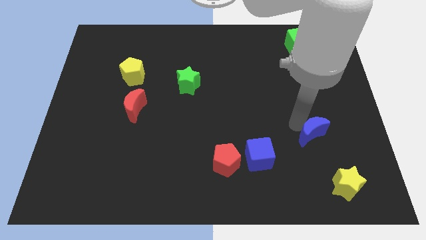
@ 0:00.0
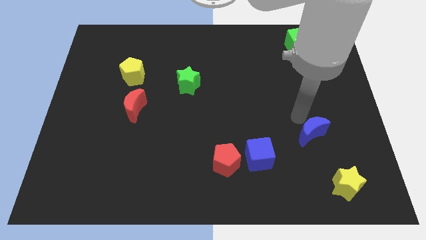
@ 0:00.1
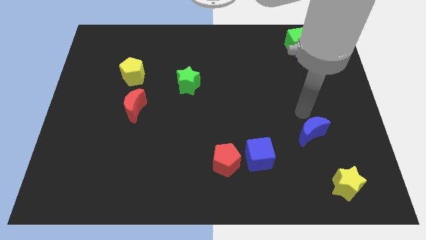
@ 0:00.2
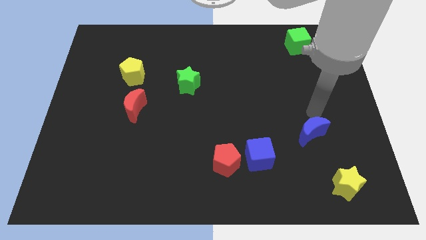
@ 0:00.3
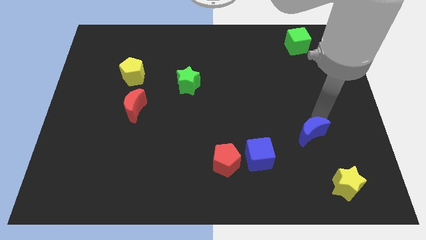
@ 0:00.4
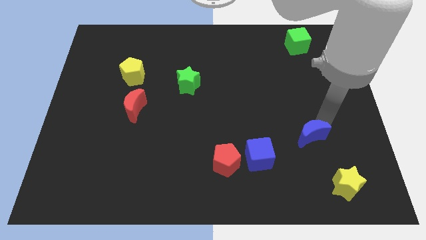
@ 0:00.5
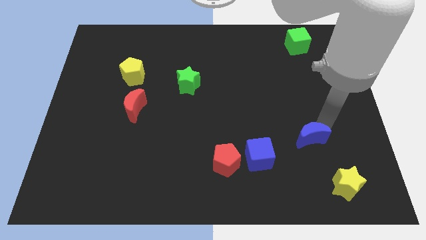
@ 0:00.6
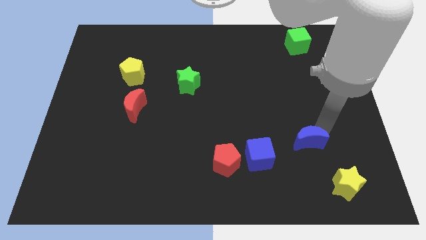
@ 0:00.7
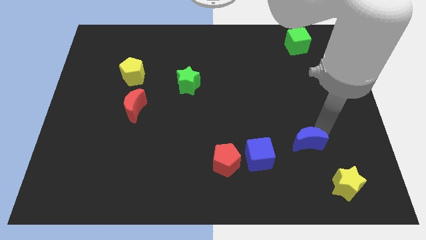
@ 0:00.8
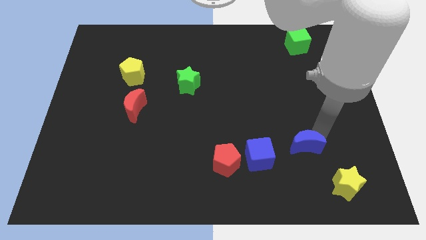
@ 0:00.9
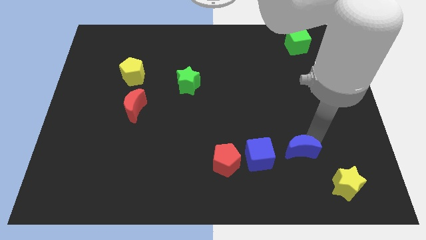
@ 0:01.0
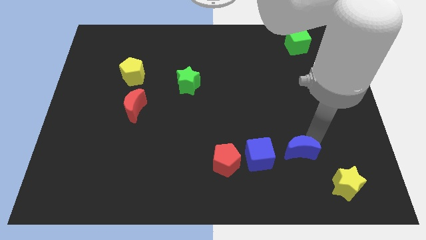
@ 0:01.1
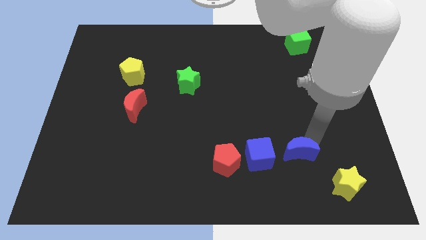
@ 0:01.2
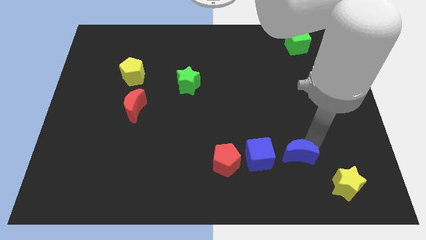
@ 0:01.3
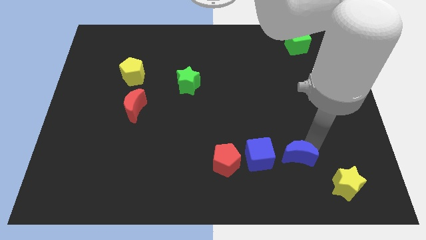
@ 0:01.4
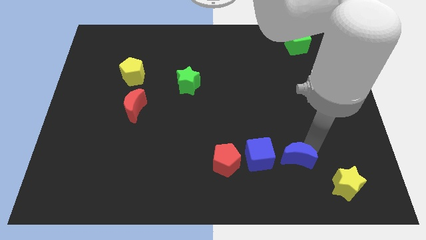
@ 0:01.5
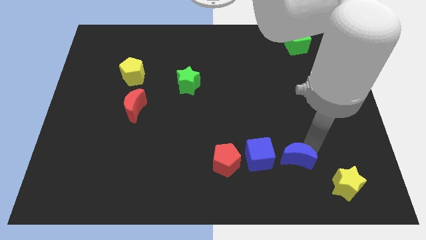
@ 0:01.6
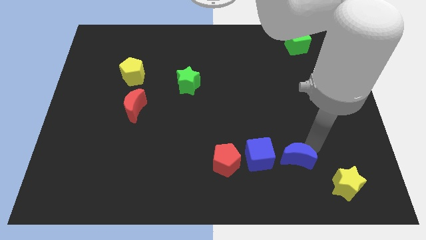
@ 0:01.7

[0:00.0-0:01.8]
bring the blue crescent close to the right side of the blue cube

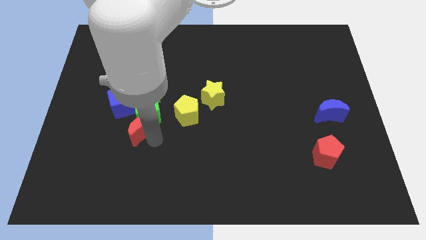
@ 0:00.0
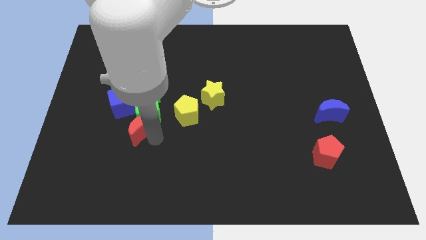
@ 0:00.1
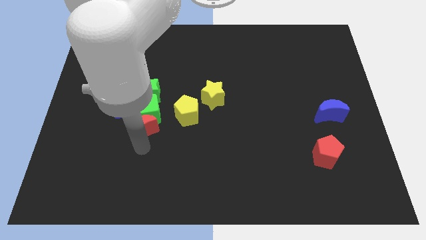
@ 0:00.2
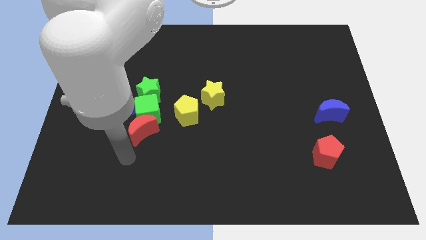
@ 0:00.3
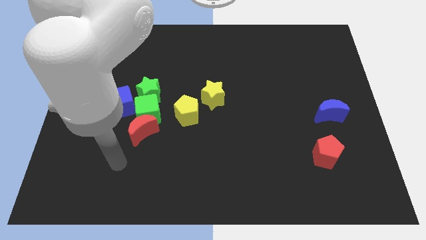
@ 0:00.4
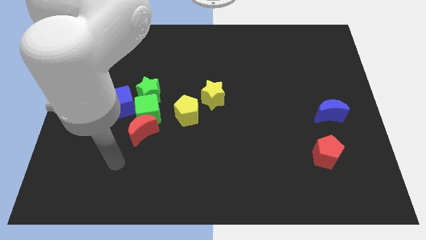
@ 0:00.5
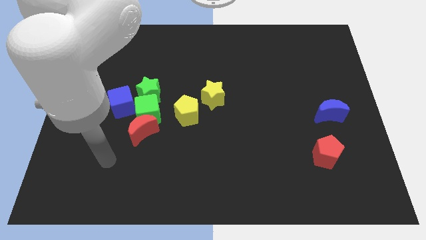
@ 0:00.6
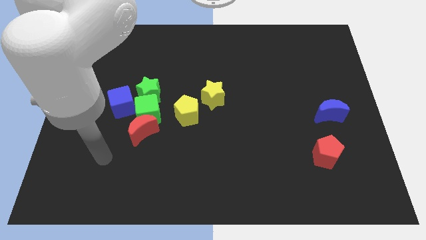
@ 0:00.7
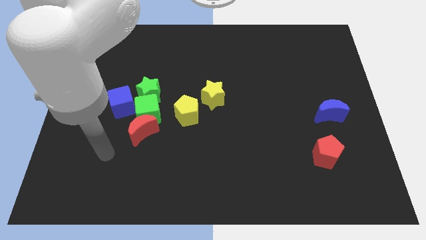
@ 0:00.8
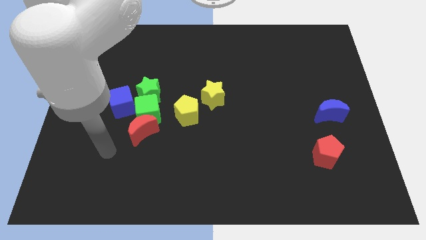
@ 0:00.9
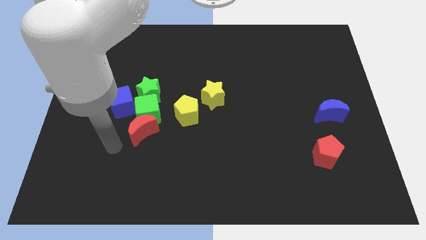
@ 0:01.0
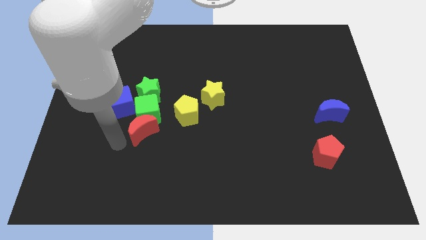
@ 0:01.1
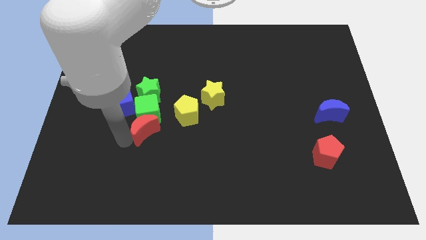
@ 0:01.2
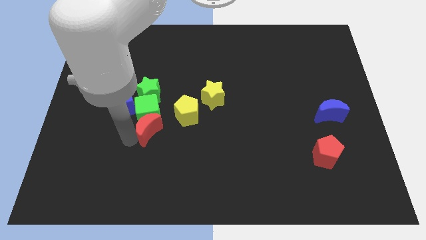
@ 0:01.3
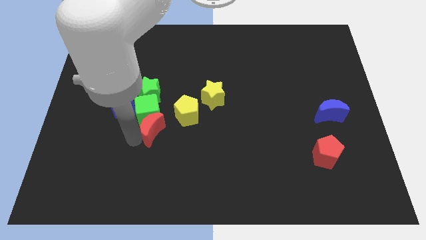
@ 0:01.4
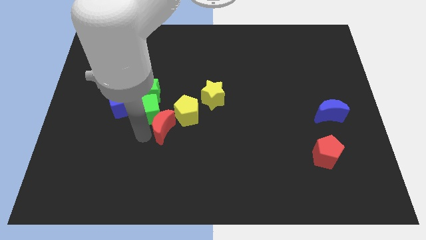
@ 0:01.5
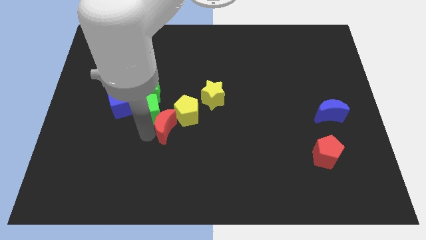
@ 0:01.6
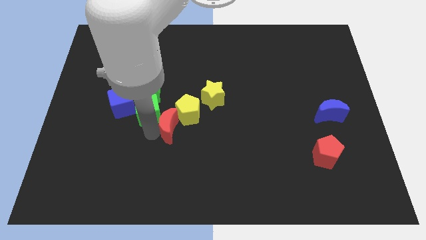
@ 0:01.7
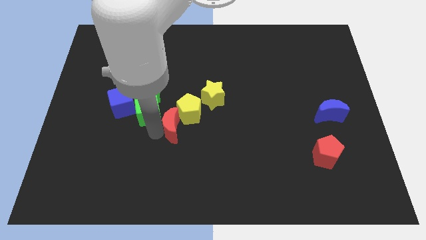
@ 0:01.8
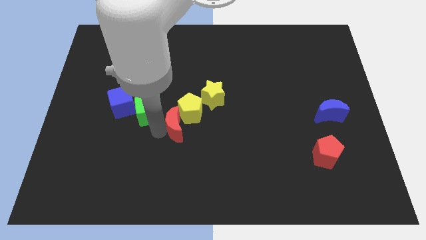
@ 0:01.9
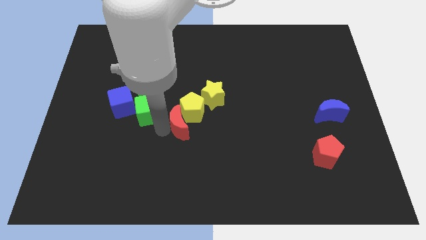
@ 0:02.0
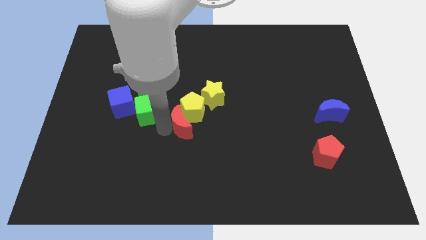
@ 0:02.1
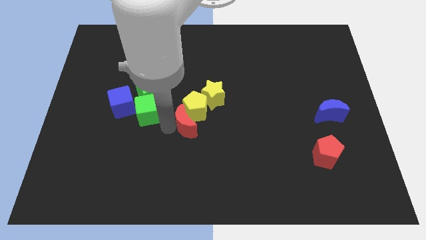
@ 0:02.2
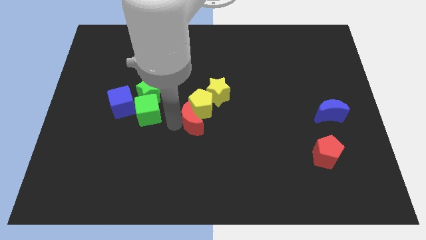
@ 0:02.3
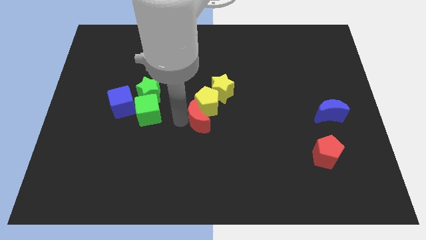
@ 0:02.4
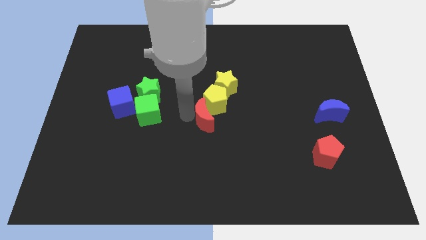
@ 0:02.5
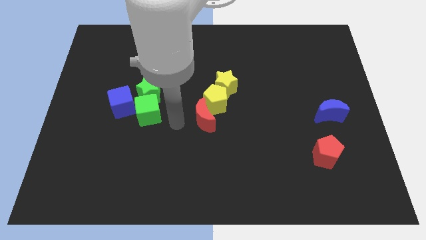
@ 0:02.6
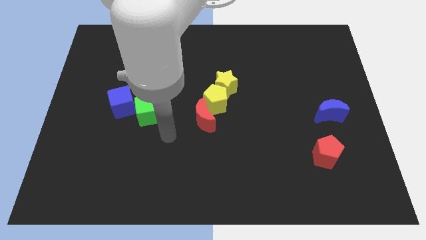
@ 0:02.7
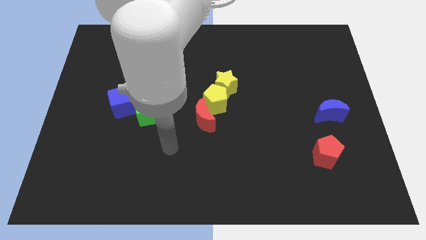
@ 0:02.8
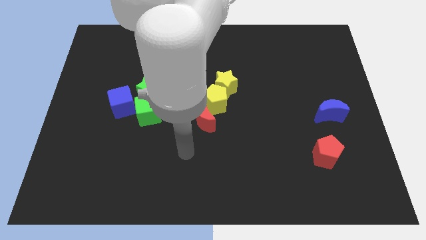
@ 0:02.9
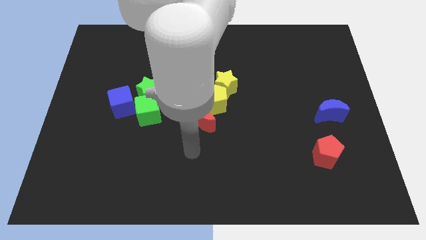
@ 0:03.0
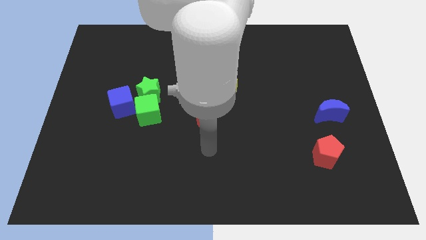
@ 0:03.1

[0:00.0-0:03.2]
push the red moon into the yellow pentagon

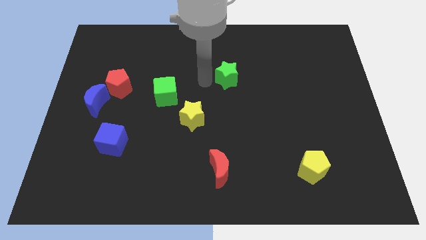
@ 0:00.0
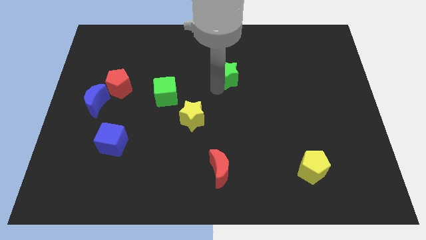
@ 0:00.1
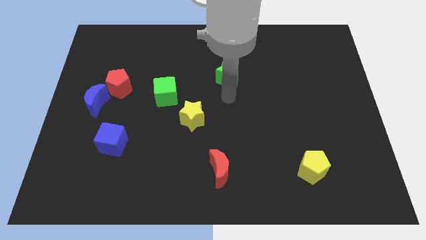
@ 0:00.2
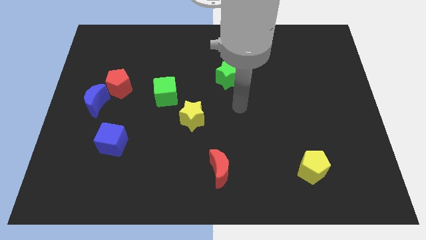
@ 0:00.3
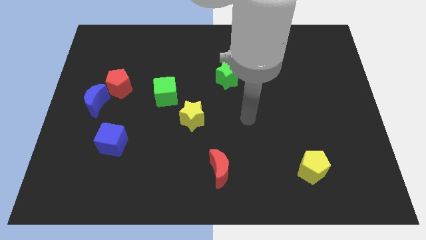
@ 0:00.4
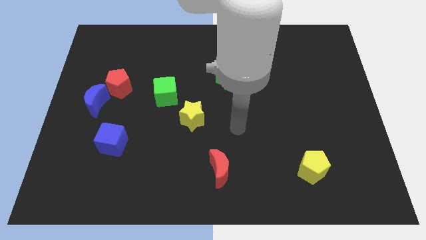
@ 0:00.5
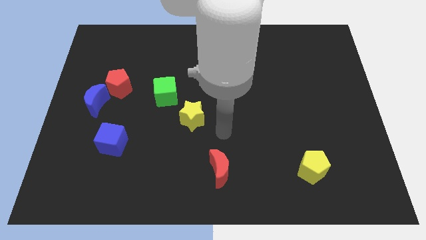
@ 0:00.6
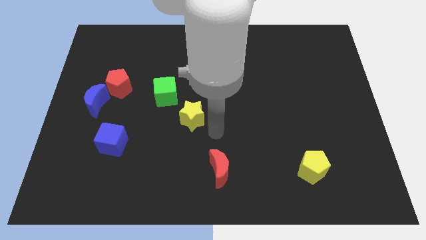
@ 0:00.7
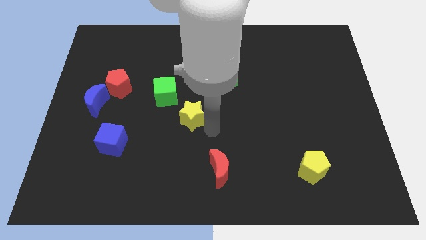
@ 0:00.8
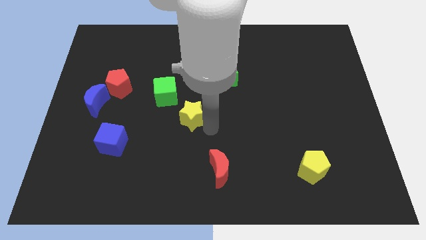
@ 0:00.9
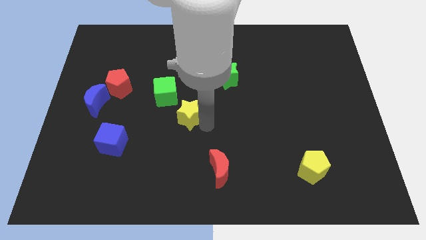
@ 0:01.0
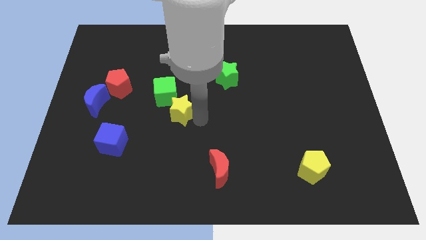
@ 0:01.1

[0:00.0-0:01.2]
place your arm below yellow star

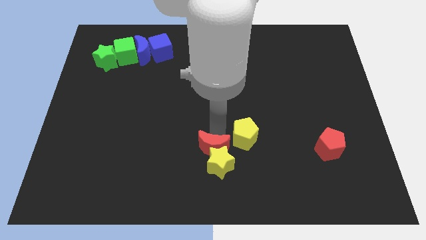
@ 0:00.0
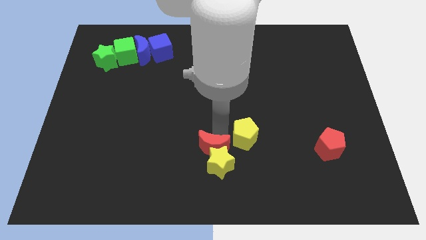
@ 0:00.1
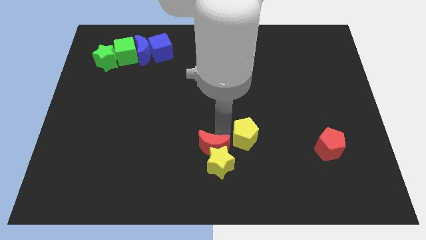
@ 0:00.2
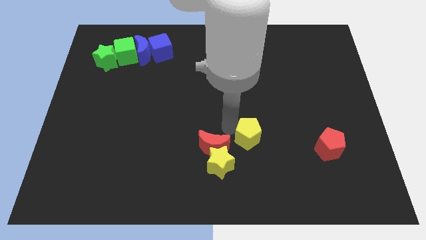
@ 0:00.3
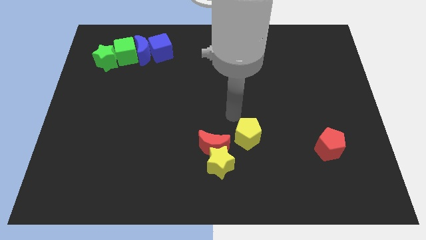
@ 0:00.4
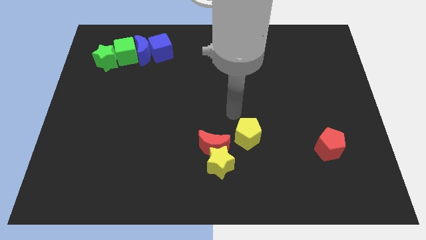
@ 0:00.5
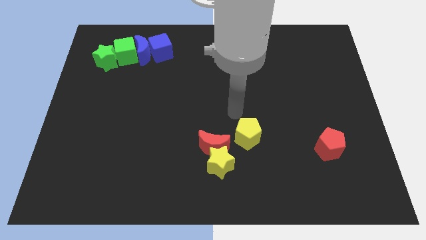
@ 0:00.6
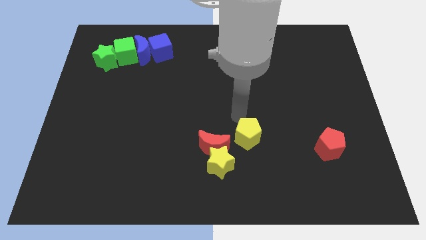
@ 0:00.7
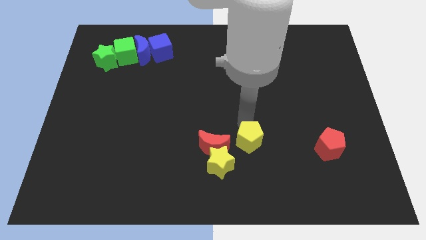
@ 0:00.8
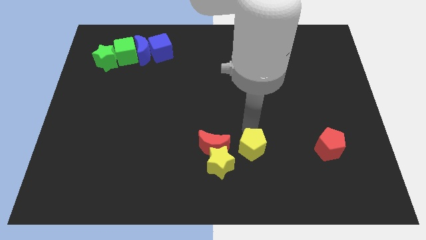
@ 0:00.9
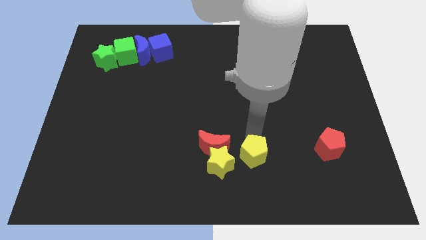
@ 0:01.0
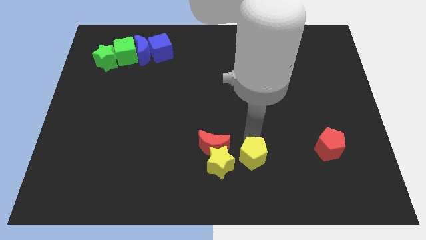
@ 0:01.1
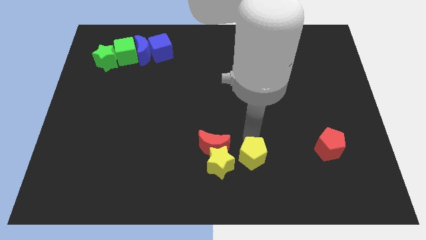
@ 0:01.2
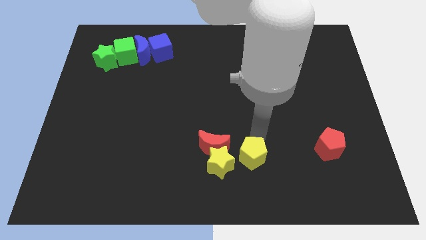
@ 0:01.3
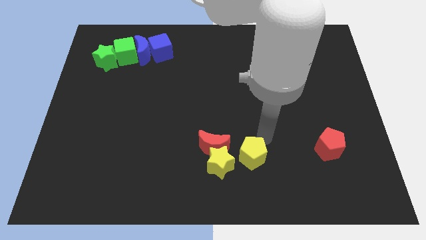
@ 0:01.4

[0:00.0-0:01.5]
slide the yellow pentagon to the right of the yellow star and red moon

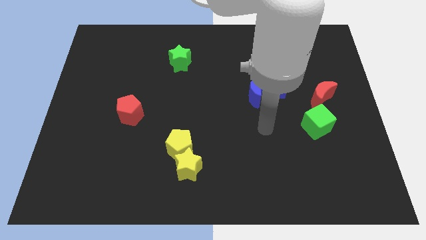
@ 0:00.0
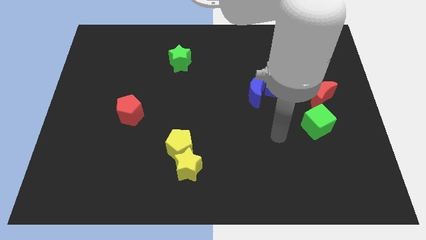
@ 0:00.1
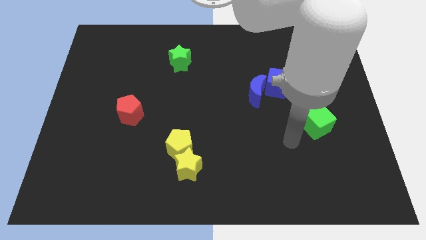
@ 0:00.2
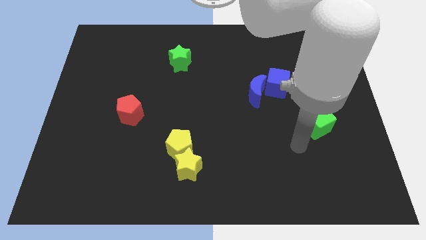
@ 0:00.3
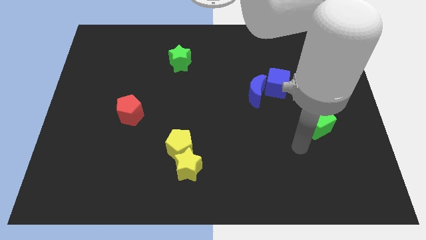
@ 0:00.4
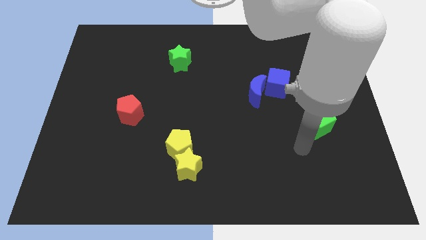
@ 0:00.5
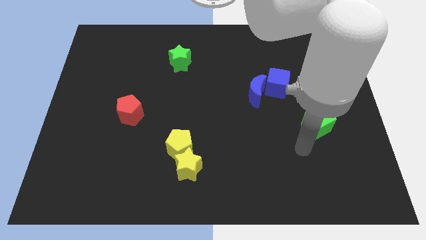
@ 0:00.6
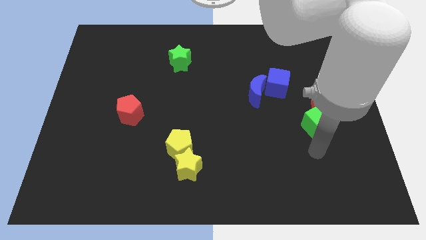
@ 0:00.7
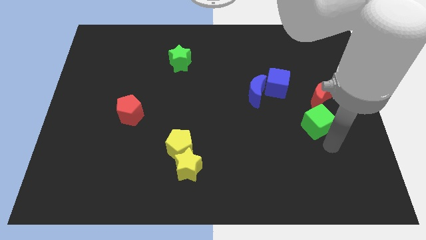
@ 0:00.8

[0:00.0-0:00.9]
place your arm to the bottom of the green cube
